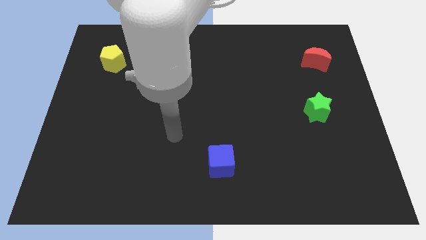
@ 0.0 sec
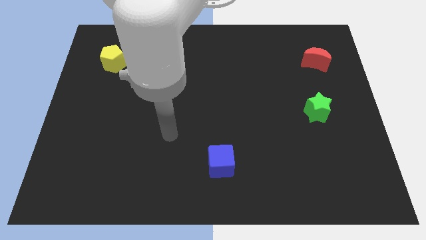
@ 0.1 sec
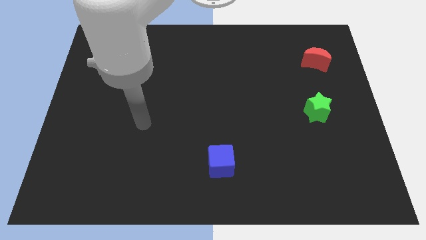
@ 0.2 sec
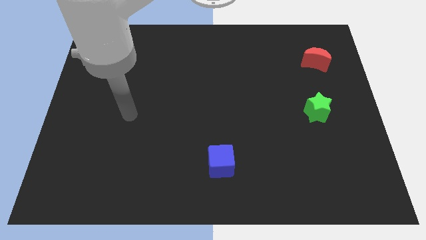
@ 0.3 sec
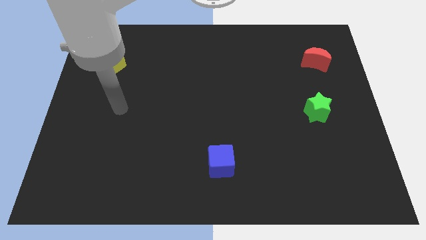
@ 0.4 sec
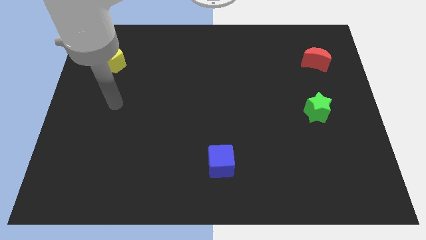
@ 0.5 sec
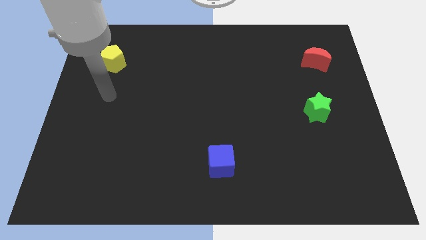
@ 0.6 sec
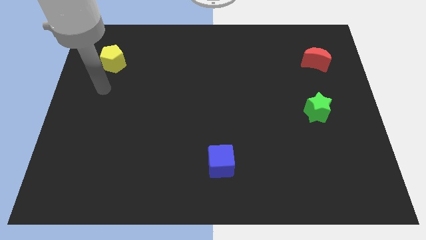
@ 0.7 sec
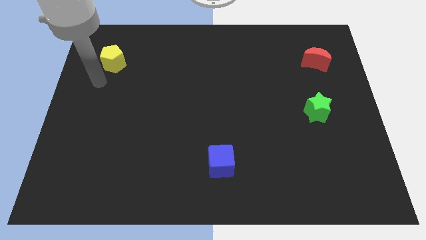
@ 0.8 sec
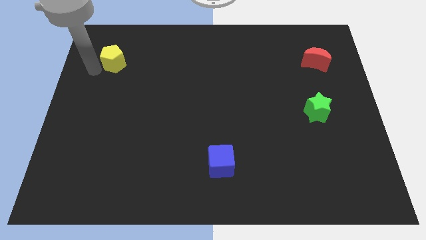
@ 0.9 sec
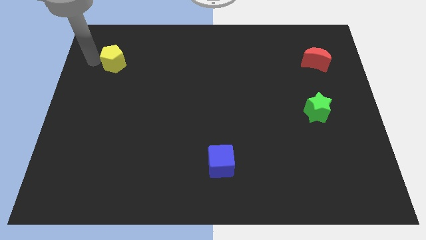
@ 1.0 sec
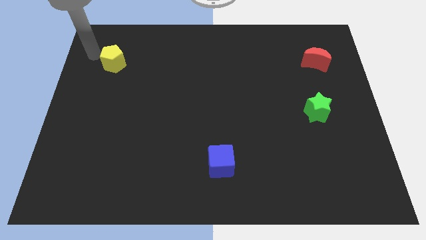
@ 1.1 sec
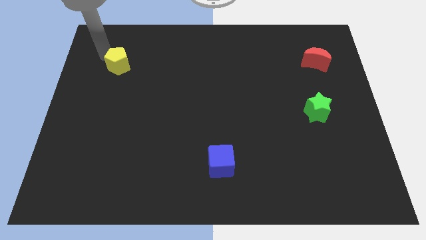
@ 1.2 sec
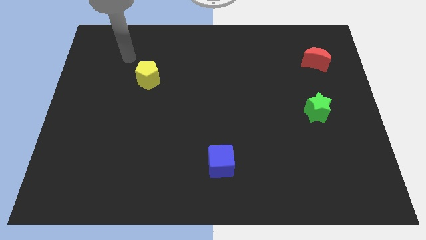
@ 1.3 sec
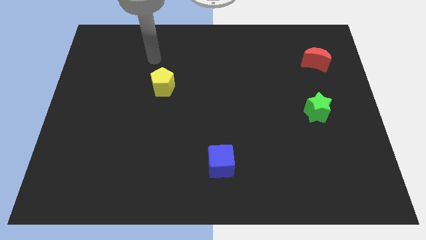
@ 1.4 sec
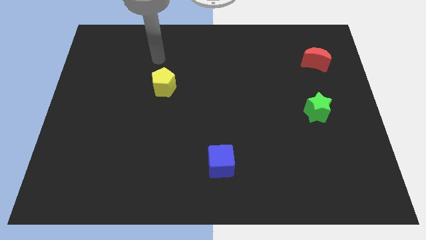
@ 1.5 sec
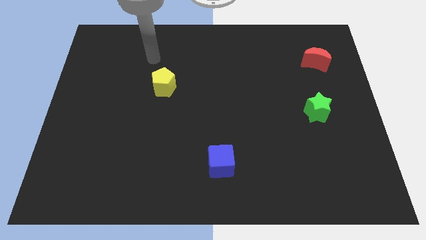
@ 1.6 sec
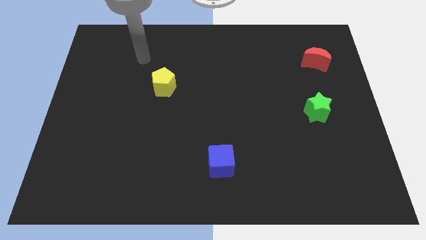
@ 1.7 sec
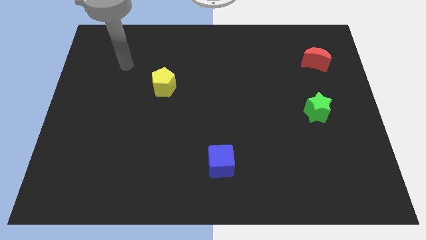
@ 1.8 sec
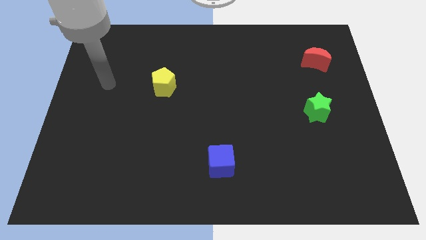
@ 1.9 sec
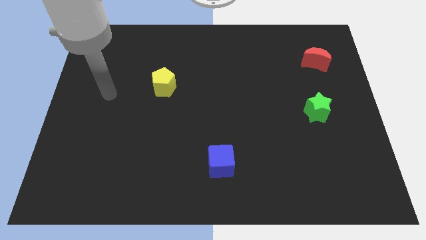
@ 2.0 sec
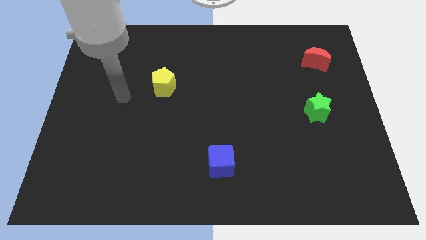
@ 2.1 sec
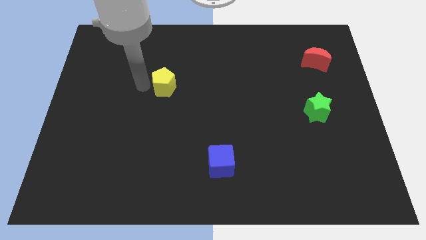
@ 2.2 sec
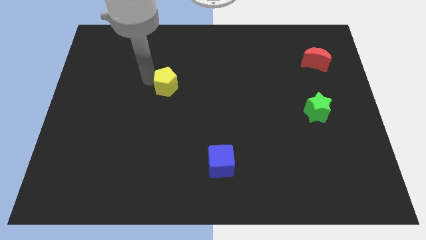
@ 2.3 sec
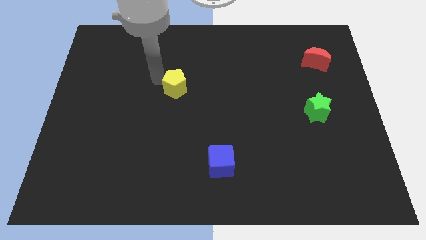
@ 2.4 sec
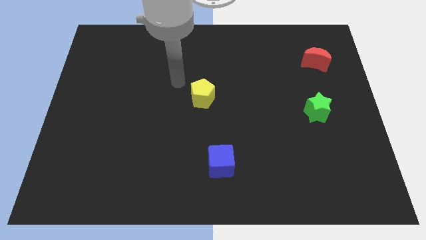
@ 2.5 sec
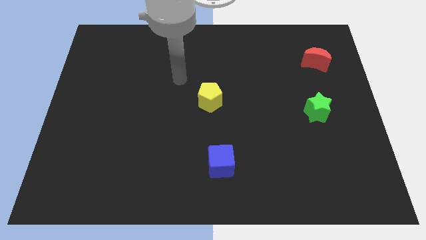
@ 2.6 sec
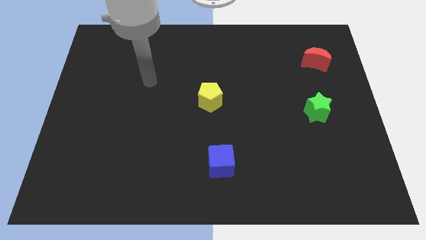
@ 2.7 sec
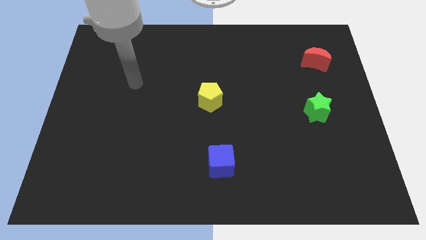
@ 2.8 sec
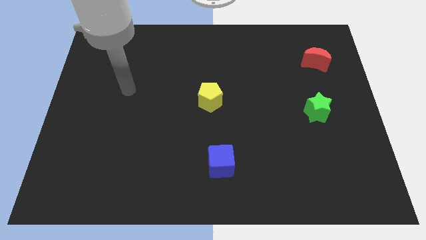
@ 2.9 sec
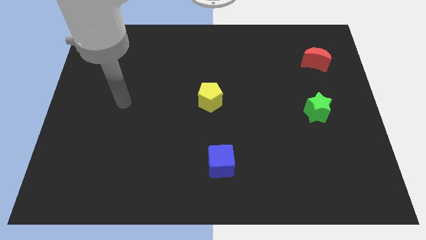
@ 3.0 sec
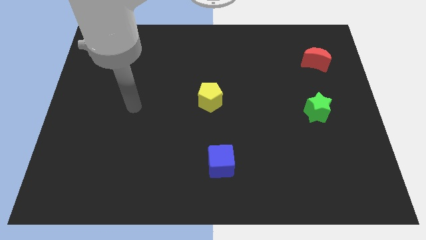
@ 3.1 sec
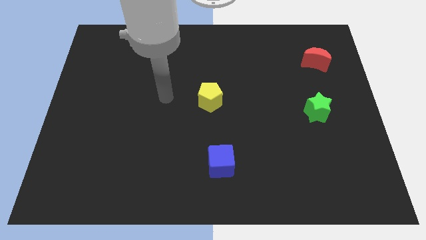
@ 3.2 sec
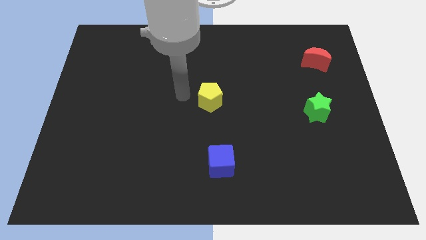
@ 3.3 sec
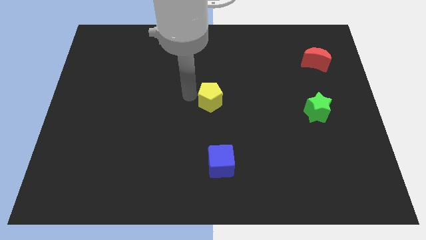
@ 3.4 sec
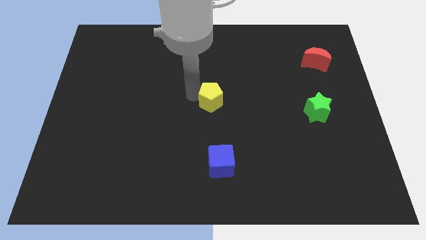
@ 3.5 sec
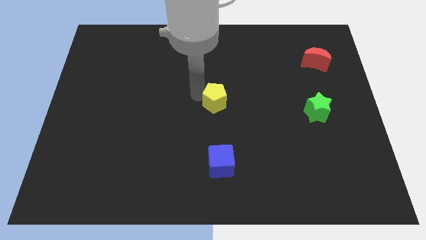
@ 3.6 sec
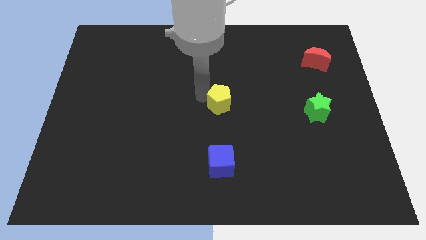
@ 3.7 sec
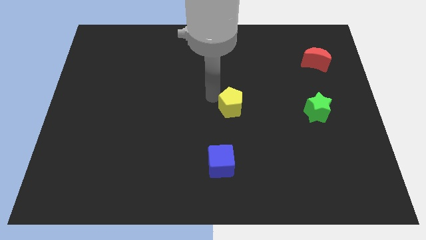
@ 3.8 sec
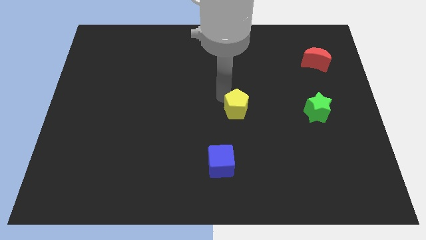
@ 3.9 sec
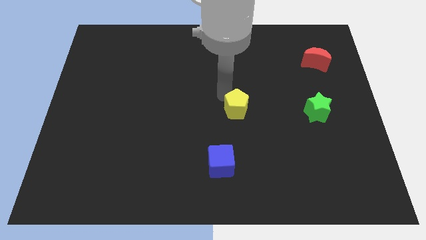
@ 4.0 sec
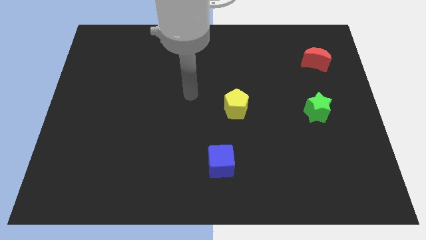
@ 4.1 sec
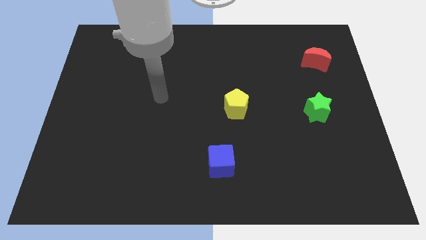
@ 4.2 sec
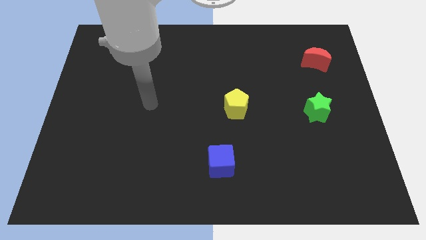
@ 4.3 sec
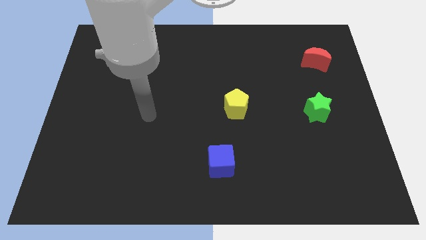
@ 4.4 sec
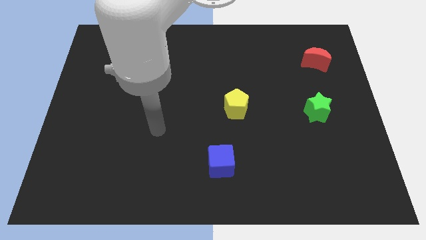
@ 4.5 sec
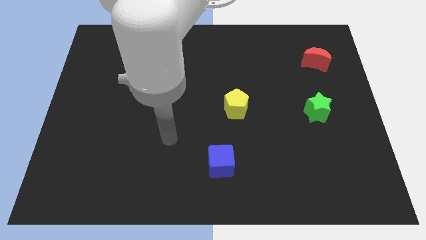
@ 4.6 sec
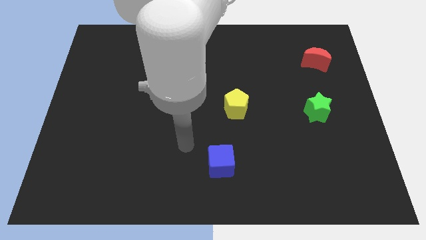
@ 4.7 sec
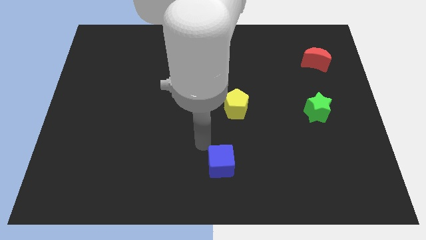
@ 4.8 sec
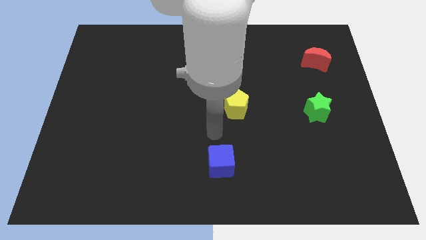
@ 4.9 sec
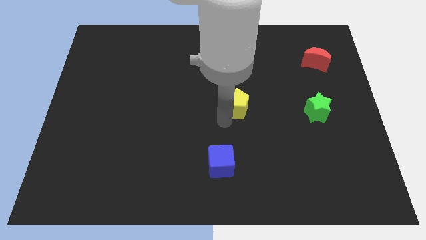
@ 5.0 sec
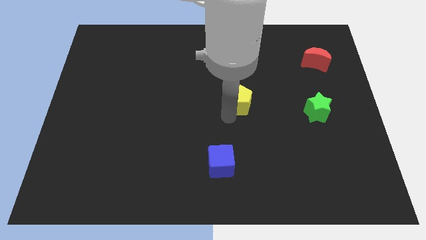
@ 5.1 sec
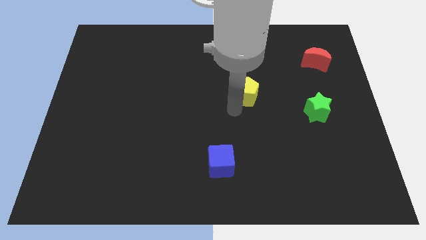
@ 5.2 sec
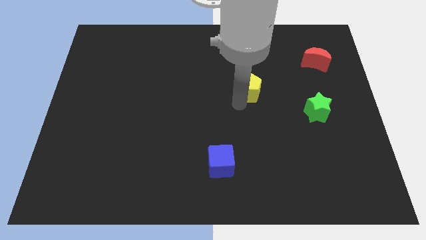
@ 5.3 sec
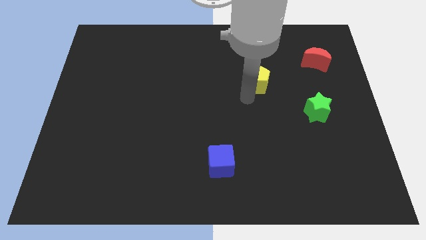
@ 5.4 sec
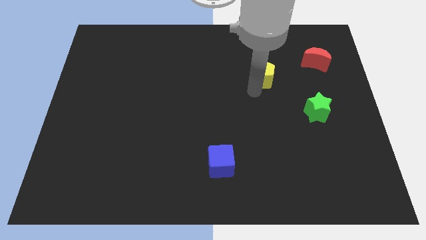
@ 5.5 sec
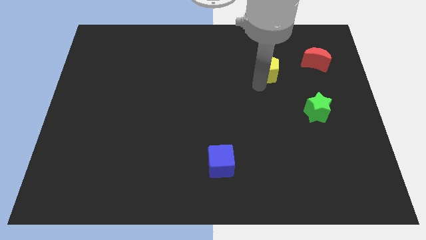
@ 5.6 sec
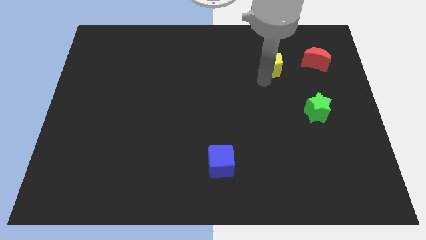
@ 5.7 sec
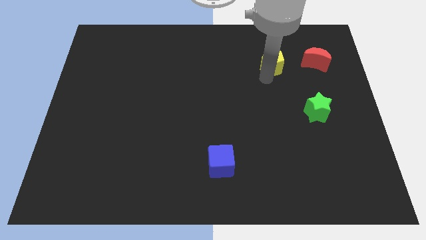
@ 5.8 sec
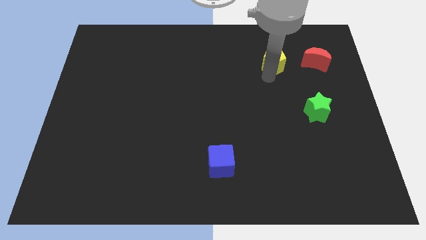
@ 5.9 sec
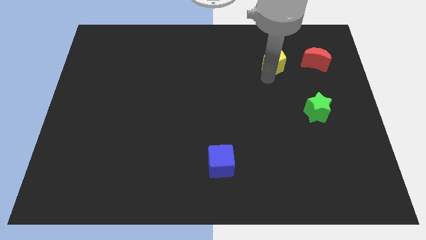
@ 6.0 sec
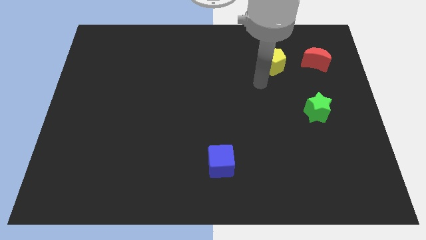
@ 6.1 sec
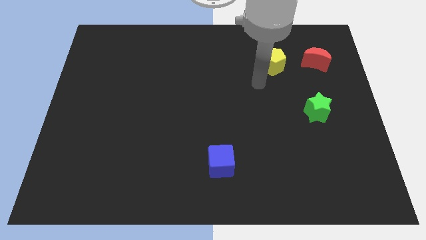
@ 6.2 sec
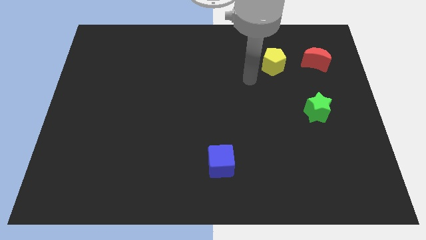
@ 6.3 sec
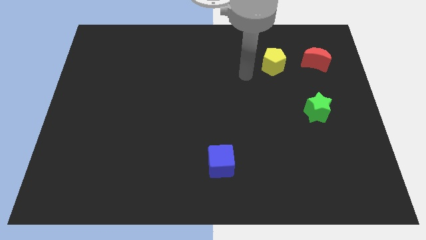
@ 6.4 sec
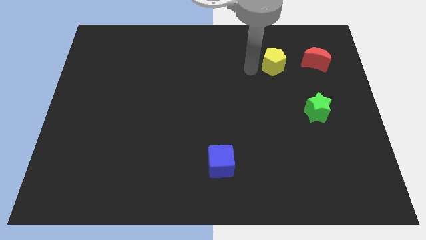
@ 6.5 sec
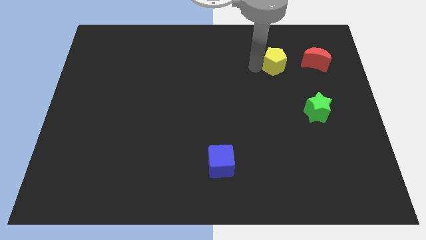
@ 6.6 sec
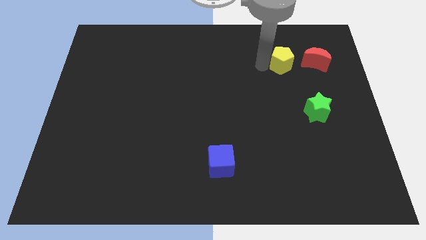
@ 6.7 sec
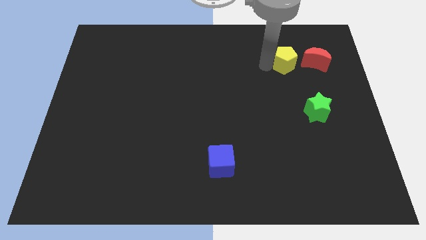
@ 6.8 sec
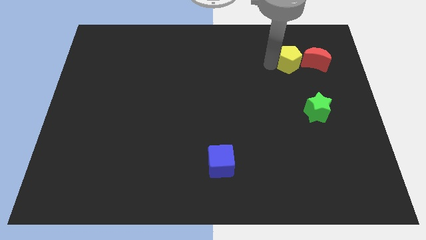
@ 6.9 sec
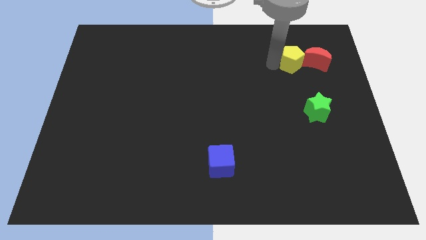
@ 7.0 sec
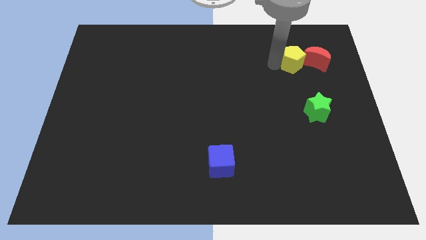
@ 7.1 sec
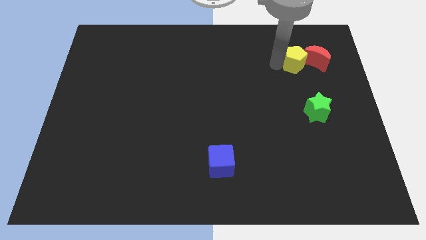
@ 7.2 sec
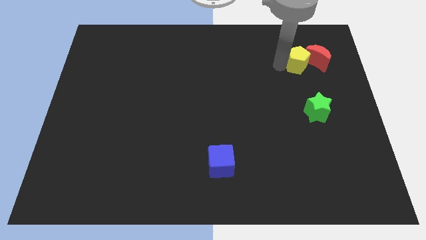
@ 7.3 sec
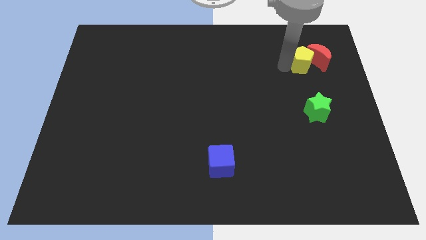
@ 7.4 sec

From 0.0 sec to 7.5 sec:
slide the yellow pentagon close to the moon

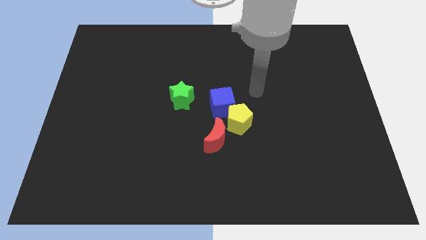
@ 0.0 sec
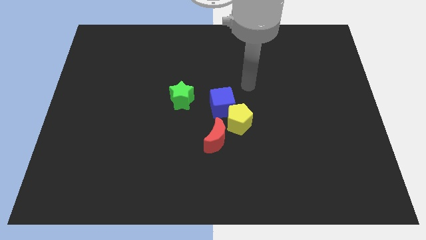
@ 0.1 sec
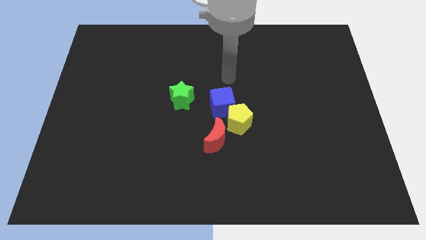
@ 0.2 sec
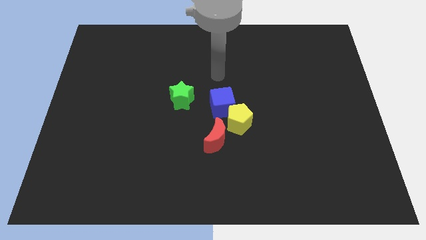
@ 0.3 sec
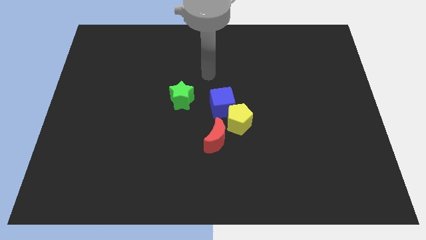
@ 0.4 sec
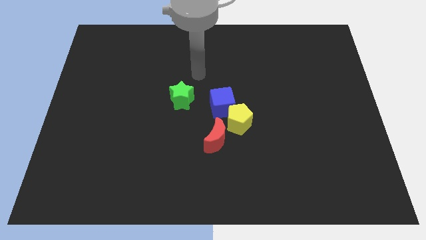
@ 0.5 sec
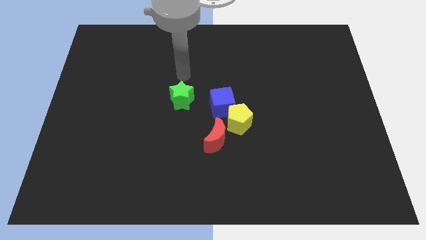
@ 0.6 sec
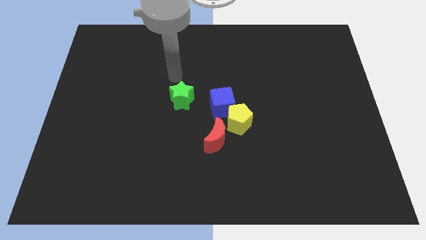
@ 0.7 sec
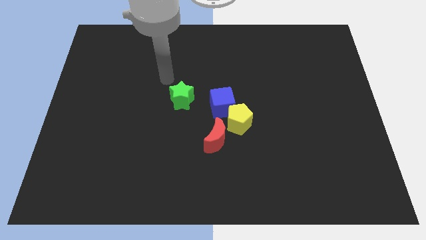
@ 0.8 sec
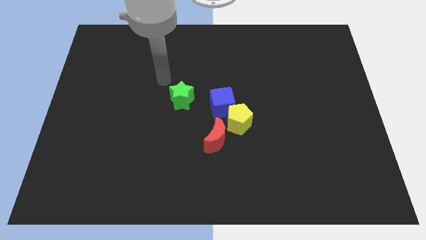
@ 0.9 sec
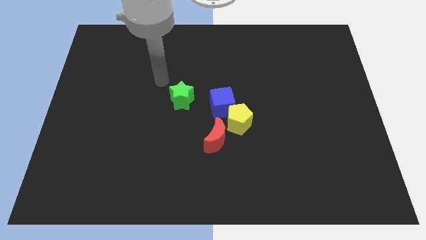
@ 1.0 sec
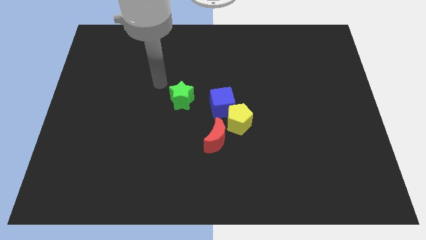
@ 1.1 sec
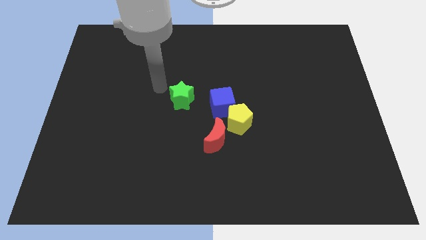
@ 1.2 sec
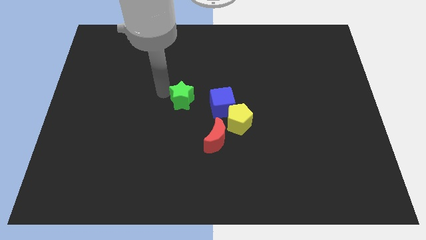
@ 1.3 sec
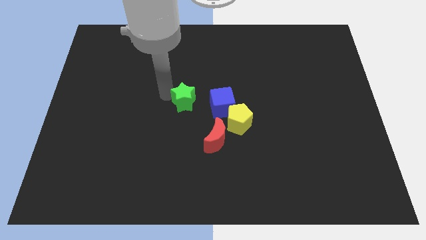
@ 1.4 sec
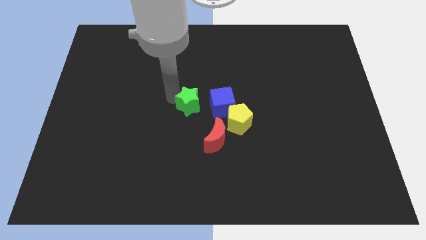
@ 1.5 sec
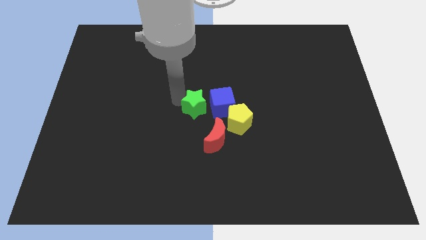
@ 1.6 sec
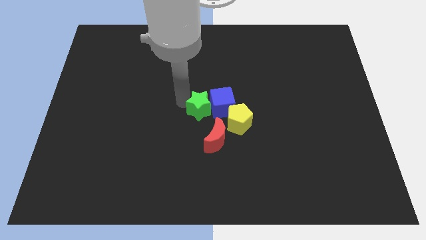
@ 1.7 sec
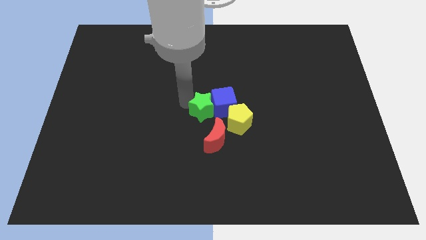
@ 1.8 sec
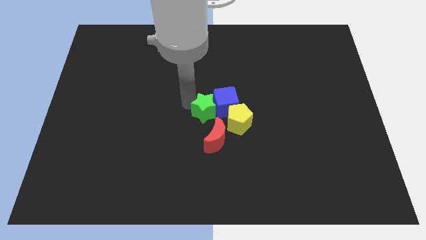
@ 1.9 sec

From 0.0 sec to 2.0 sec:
slide the green block to the blue block
